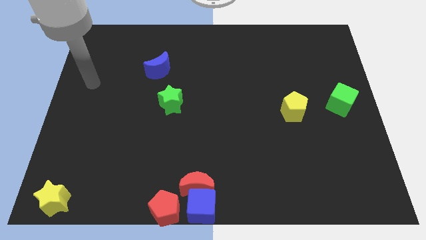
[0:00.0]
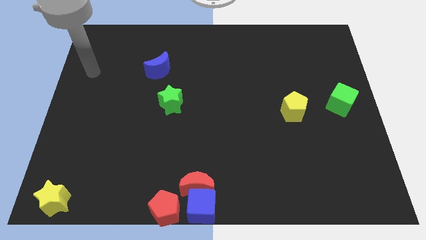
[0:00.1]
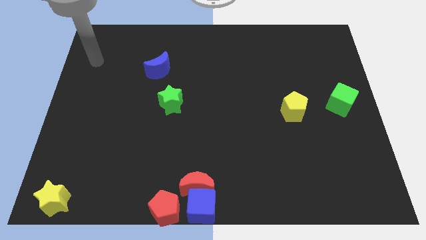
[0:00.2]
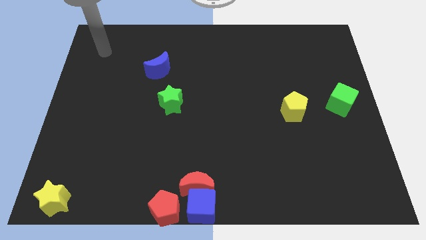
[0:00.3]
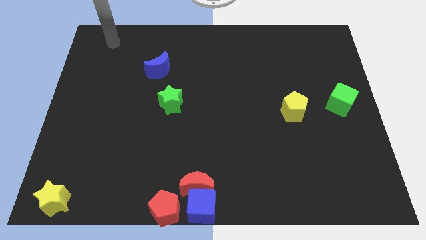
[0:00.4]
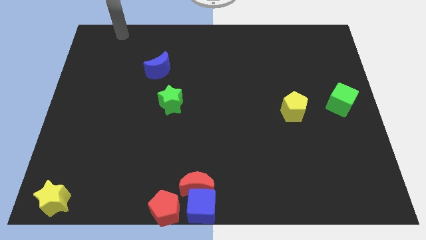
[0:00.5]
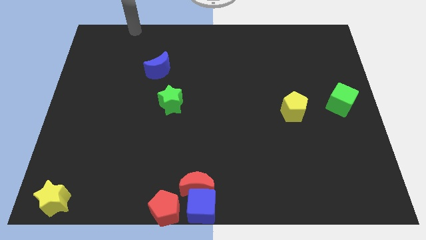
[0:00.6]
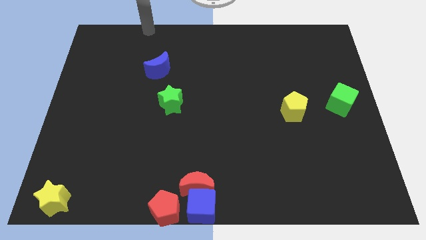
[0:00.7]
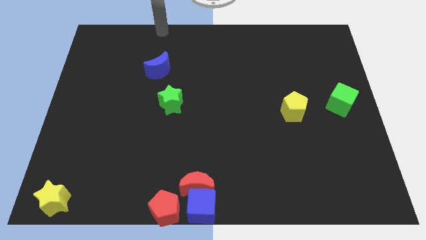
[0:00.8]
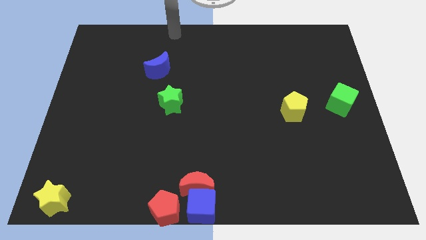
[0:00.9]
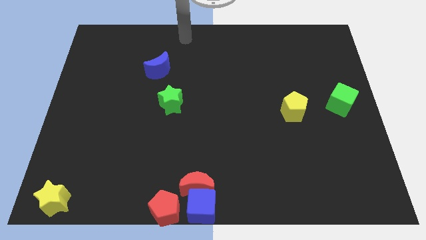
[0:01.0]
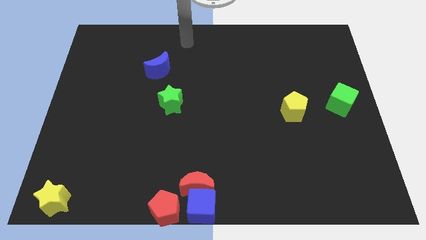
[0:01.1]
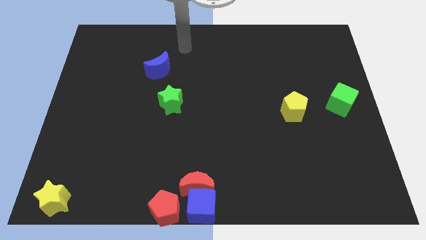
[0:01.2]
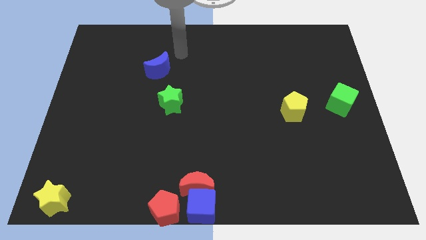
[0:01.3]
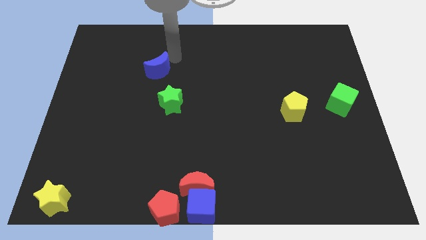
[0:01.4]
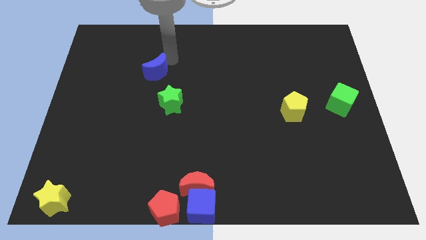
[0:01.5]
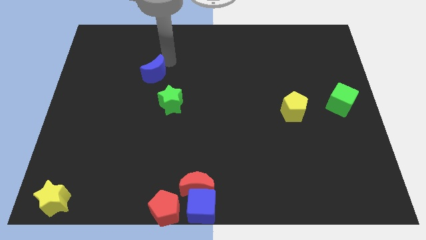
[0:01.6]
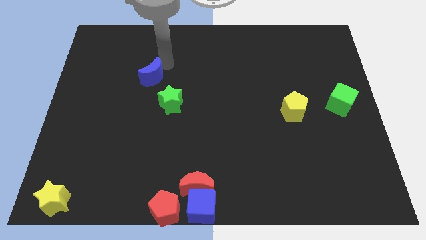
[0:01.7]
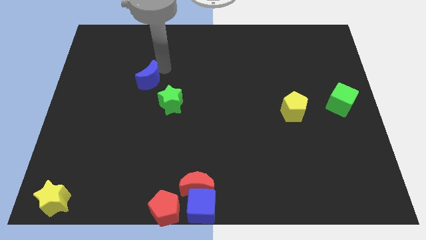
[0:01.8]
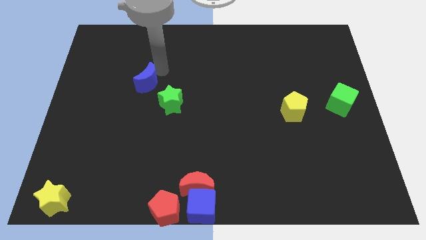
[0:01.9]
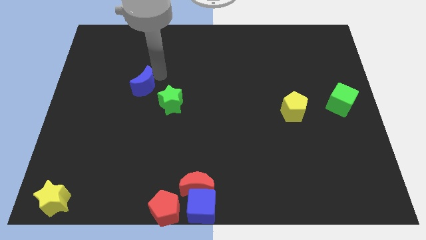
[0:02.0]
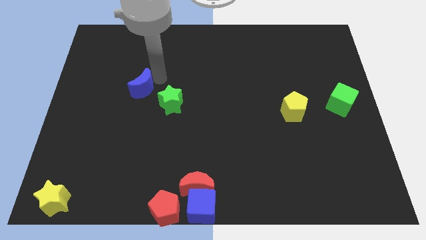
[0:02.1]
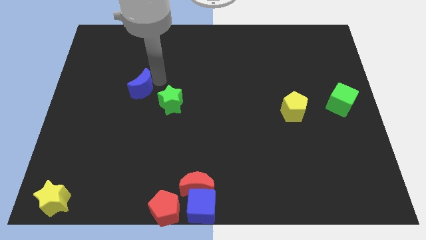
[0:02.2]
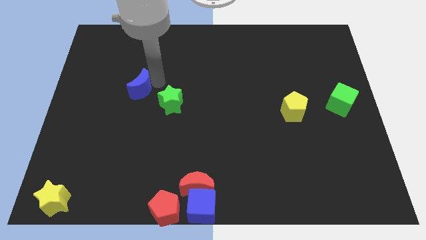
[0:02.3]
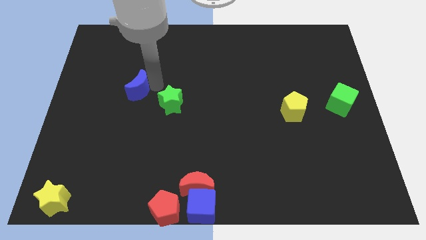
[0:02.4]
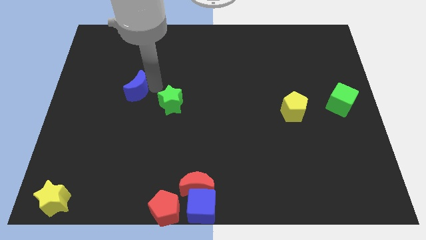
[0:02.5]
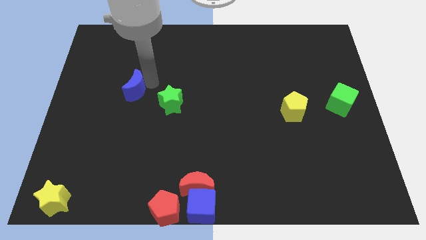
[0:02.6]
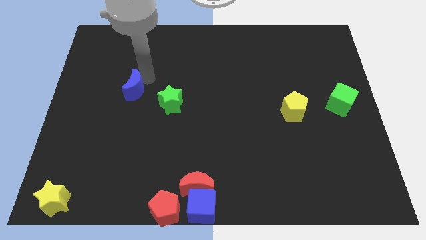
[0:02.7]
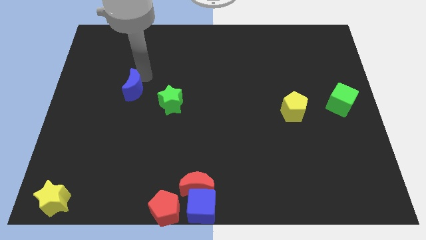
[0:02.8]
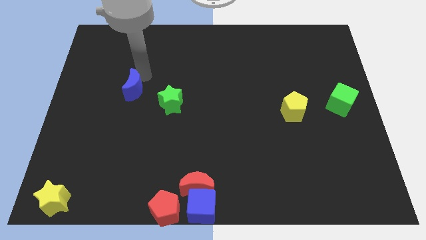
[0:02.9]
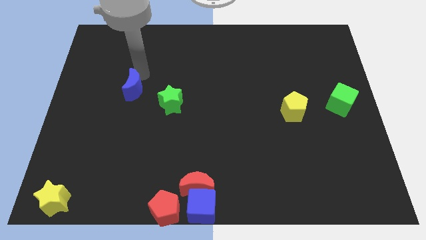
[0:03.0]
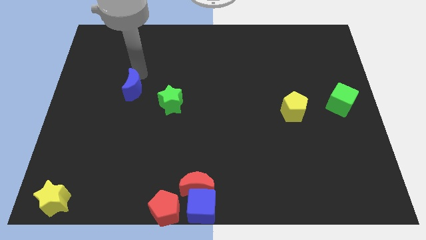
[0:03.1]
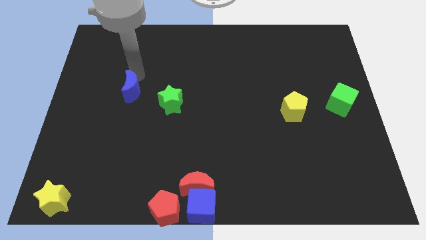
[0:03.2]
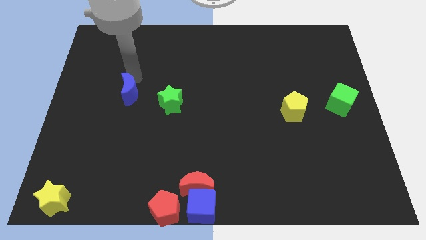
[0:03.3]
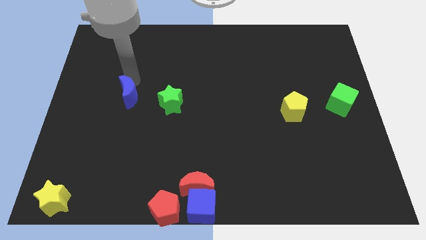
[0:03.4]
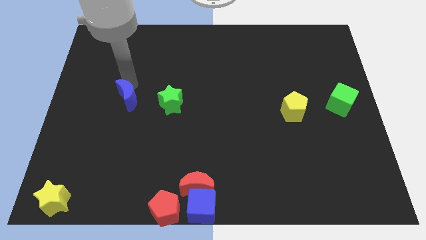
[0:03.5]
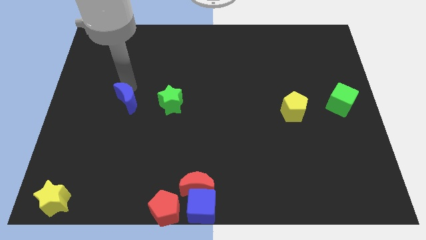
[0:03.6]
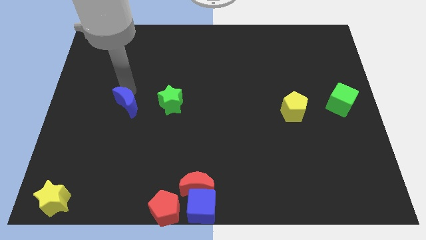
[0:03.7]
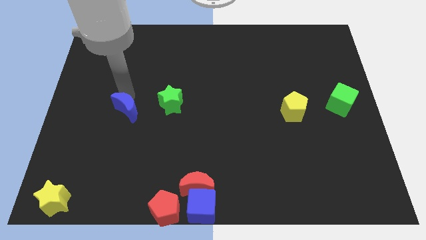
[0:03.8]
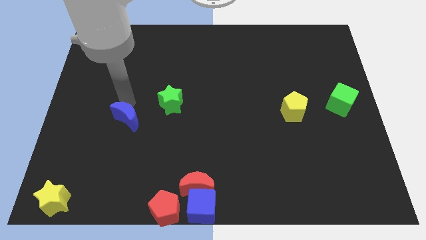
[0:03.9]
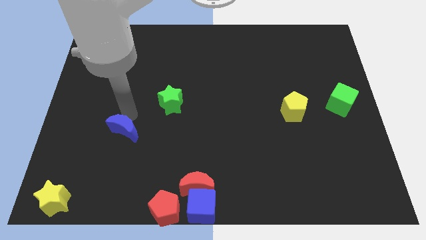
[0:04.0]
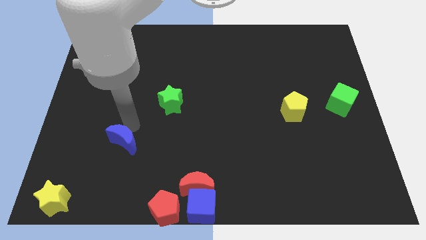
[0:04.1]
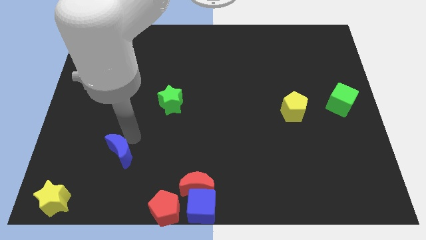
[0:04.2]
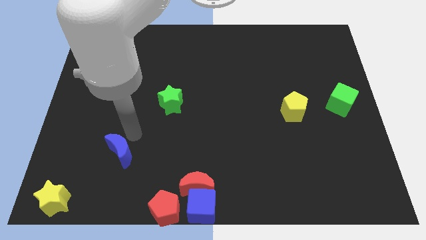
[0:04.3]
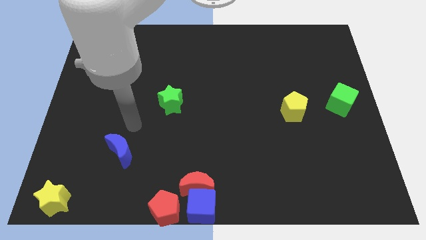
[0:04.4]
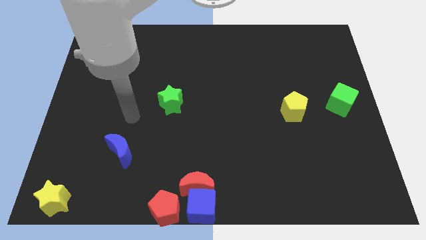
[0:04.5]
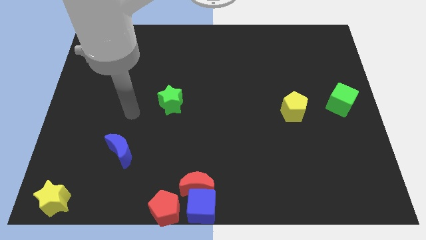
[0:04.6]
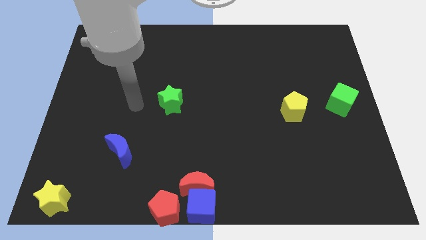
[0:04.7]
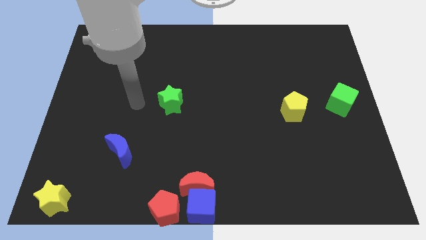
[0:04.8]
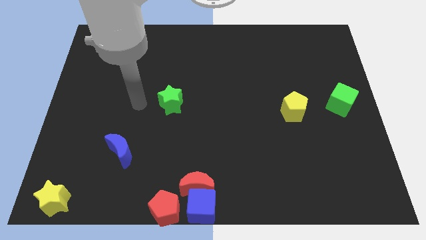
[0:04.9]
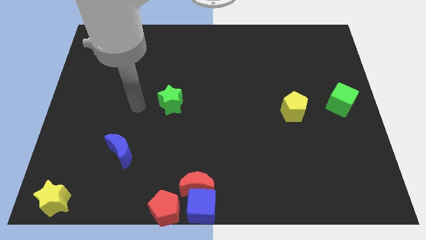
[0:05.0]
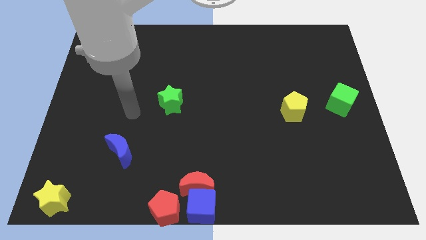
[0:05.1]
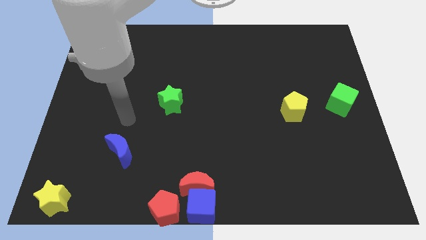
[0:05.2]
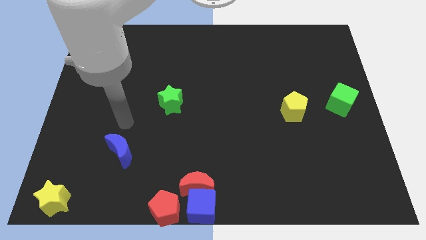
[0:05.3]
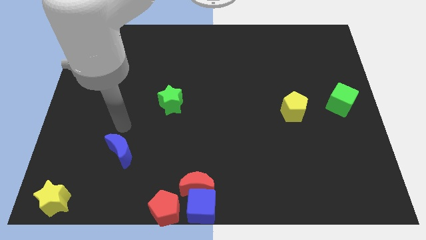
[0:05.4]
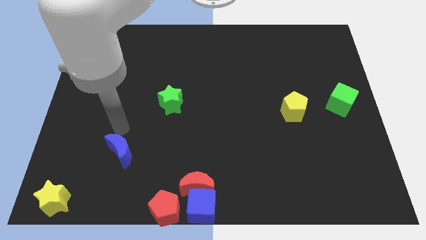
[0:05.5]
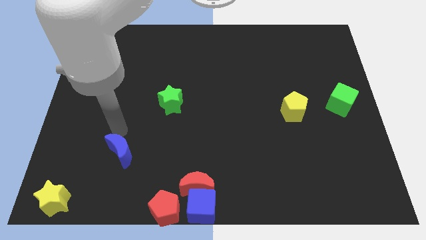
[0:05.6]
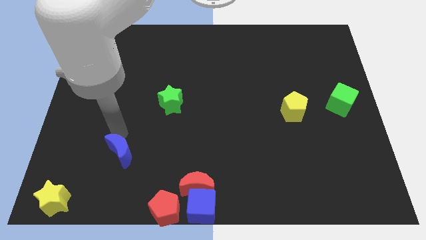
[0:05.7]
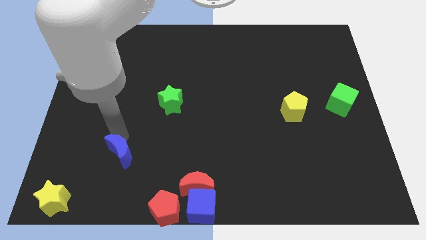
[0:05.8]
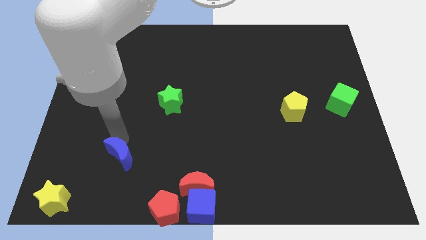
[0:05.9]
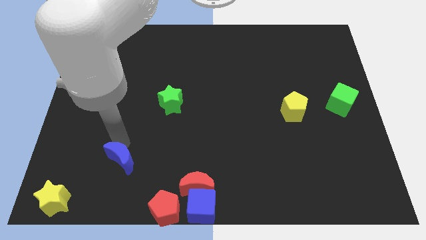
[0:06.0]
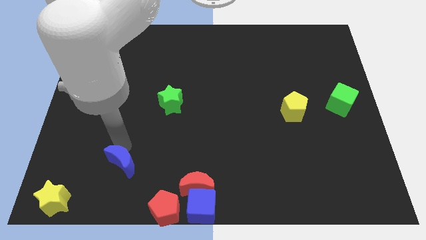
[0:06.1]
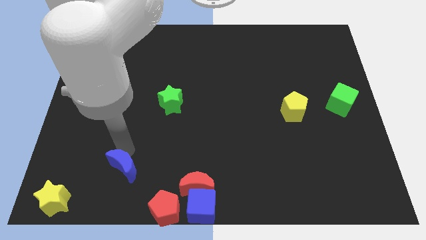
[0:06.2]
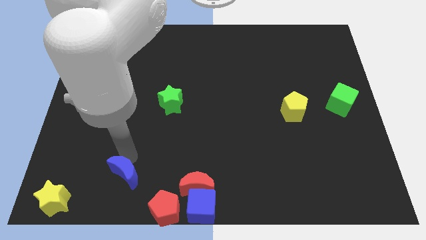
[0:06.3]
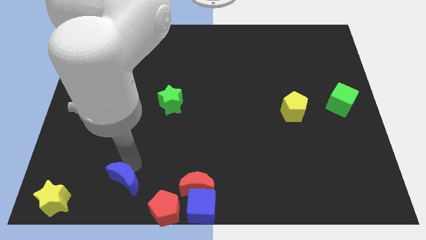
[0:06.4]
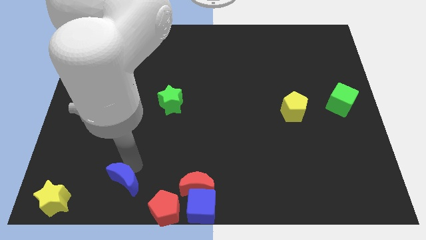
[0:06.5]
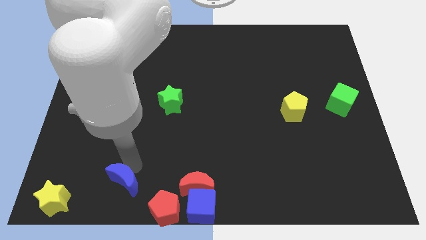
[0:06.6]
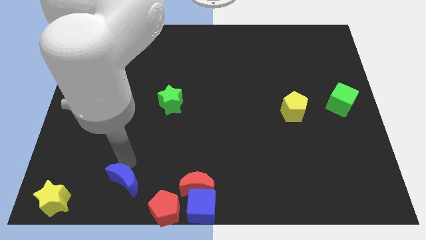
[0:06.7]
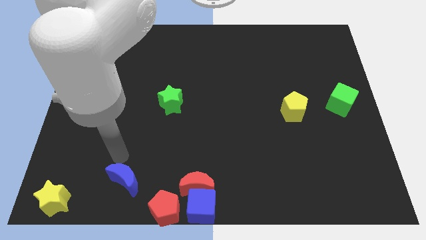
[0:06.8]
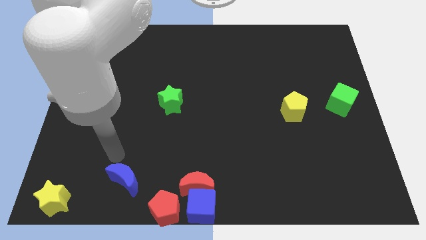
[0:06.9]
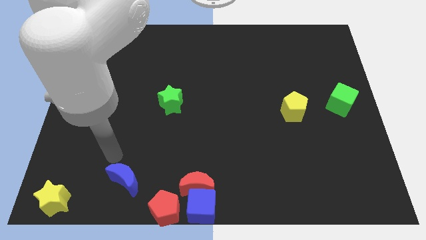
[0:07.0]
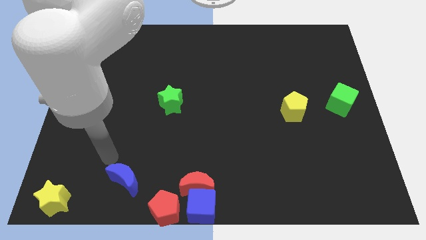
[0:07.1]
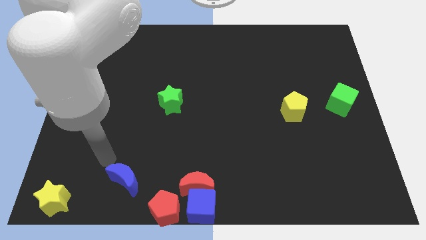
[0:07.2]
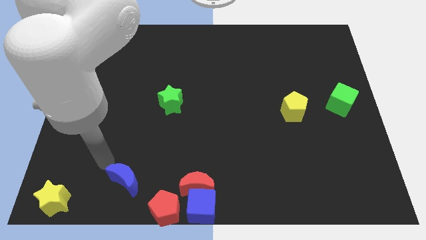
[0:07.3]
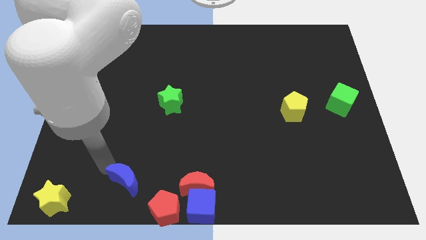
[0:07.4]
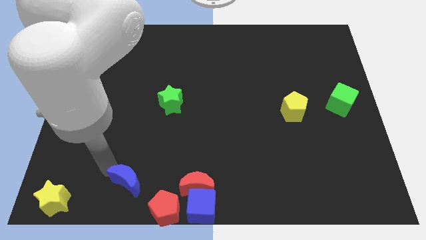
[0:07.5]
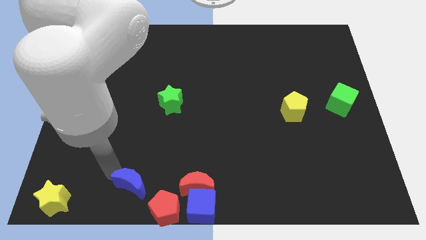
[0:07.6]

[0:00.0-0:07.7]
place the blue moon at the top of the red pentagon

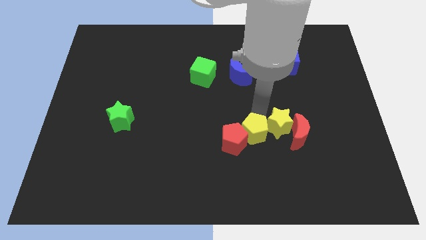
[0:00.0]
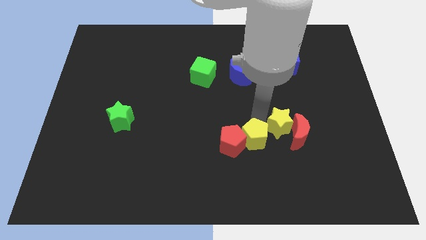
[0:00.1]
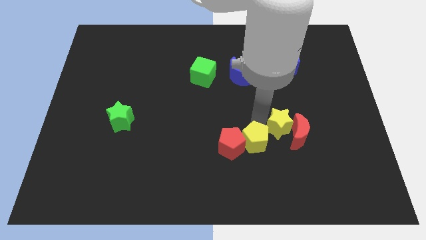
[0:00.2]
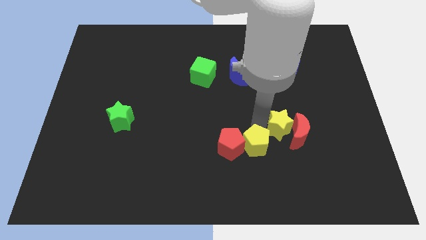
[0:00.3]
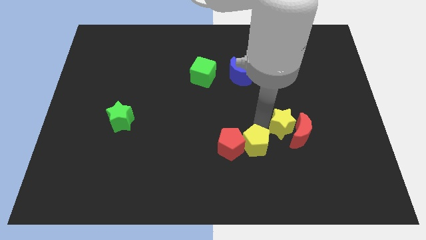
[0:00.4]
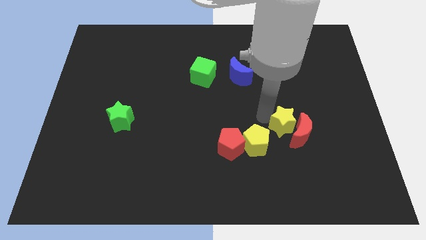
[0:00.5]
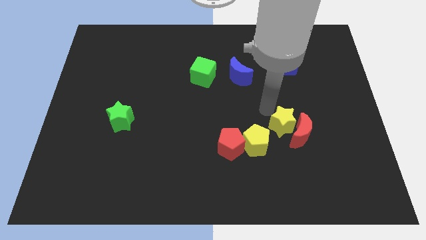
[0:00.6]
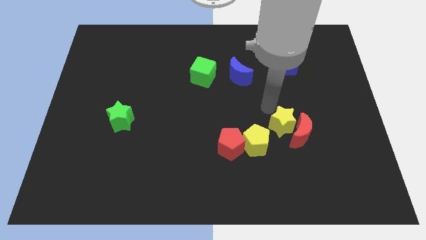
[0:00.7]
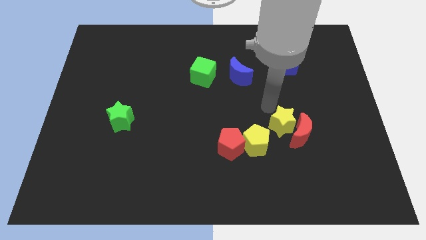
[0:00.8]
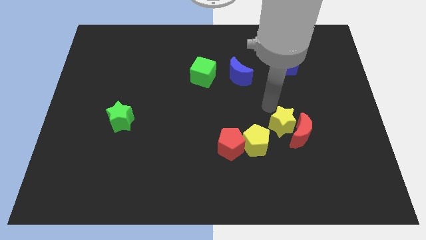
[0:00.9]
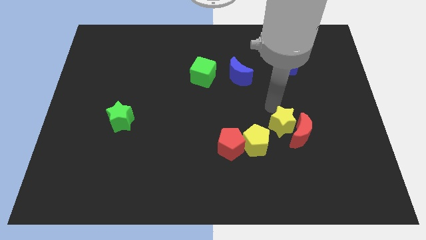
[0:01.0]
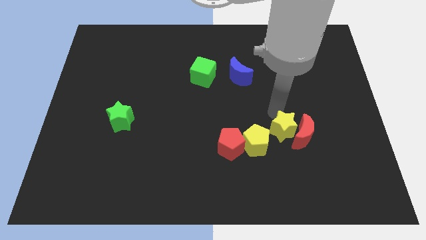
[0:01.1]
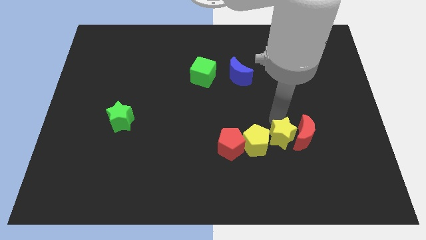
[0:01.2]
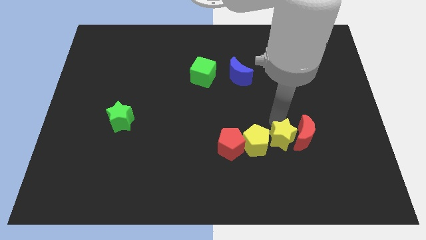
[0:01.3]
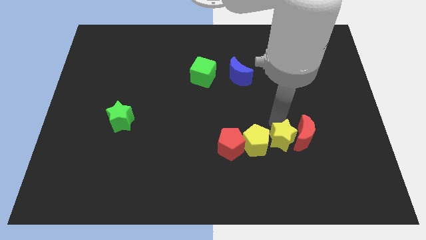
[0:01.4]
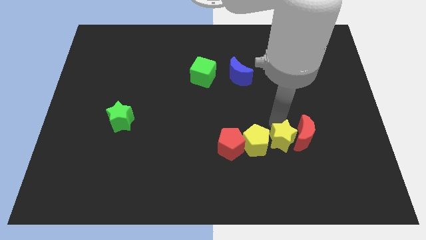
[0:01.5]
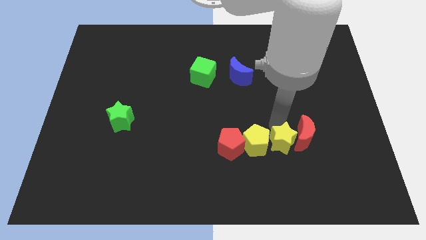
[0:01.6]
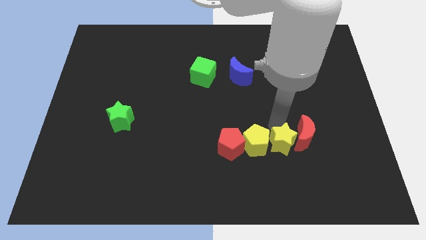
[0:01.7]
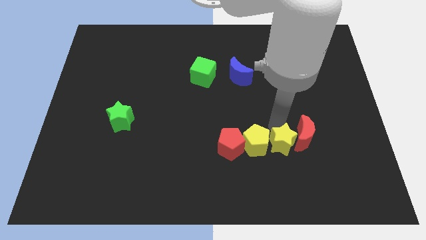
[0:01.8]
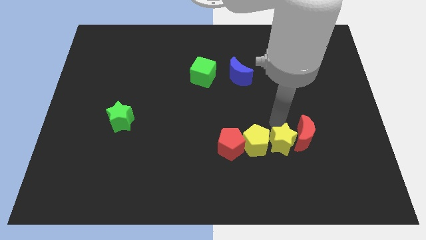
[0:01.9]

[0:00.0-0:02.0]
slightly push the yellow star towards down
